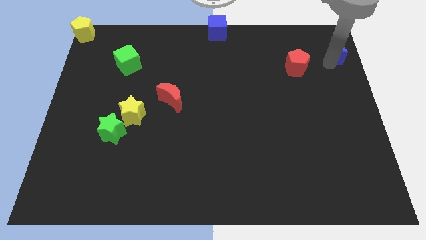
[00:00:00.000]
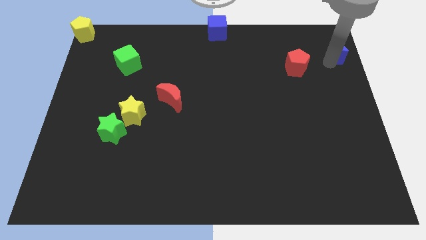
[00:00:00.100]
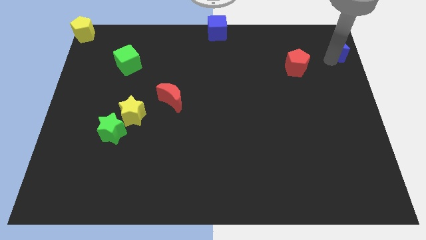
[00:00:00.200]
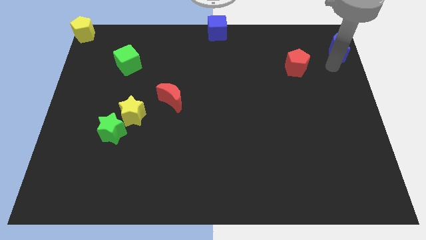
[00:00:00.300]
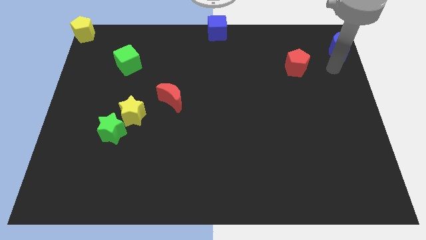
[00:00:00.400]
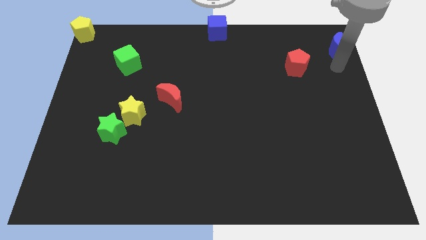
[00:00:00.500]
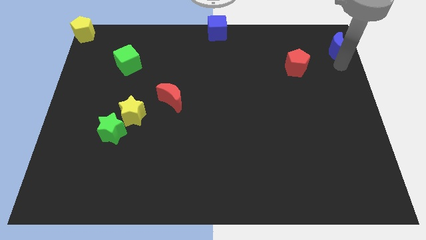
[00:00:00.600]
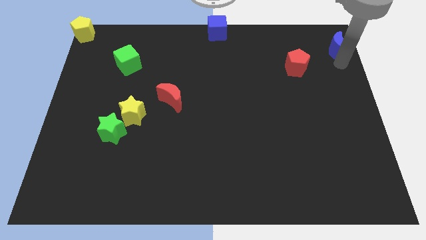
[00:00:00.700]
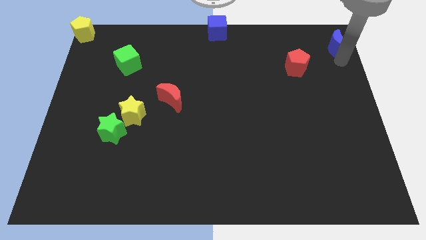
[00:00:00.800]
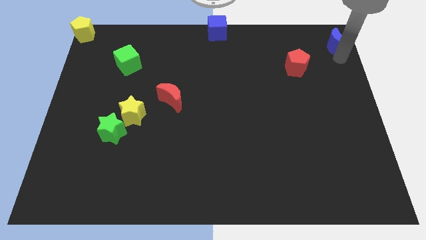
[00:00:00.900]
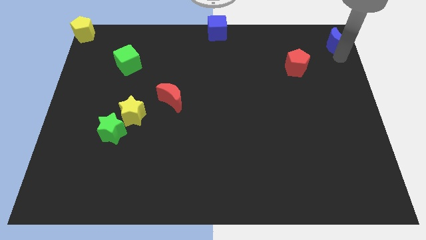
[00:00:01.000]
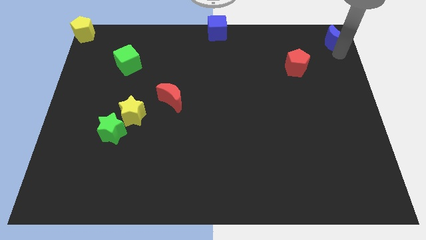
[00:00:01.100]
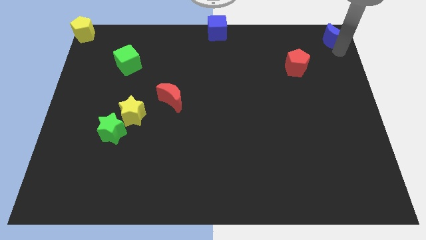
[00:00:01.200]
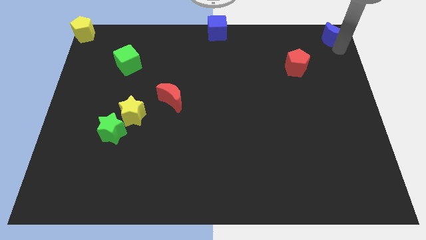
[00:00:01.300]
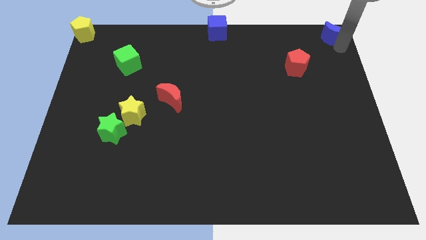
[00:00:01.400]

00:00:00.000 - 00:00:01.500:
place the blue moon at the top right corner of the board

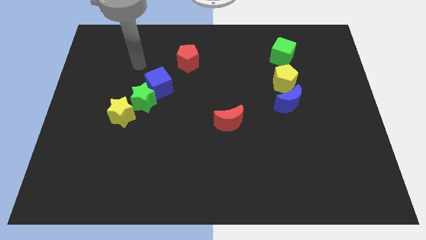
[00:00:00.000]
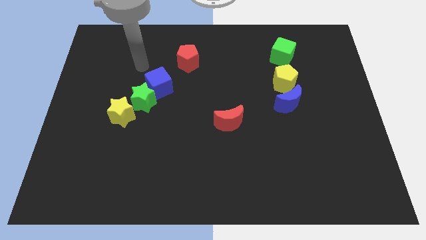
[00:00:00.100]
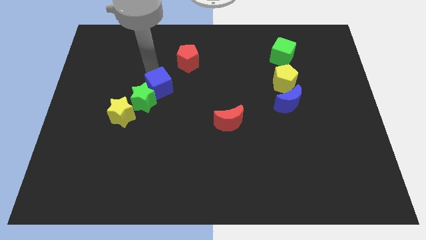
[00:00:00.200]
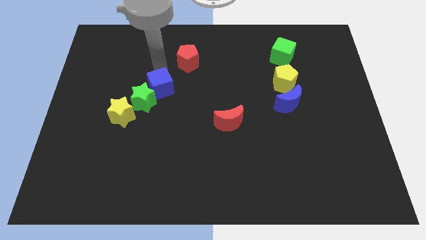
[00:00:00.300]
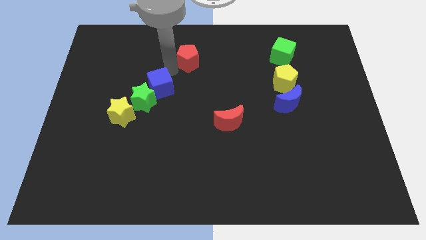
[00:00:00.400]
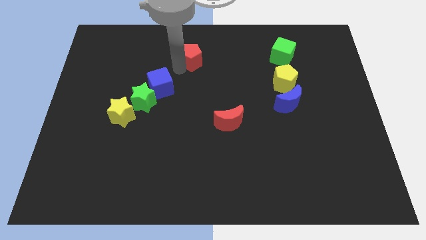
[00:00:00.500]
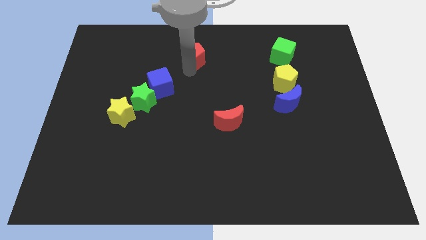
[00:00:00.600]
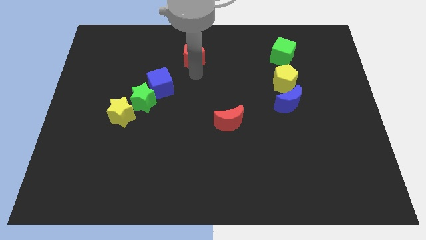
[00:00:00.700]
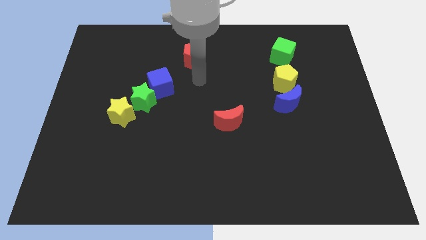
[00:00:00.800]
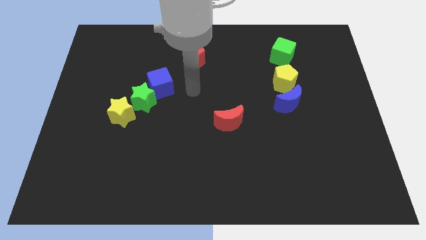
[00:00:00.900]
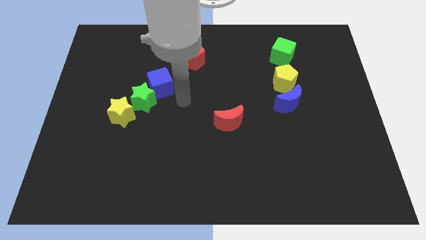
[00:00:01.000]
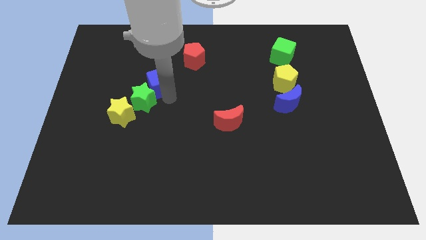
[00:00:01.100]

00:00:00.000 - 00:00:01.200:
point your arm at the bottom right side of the blue cube

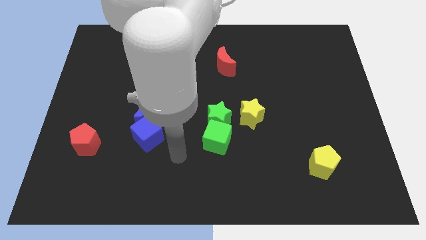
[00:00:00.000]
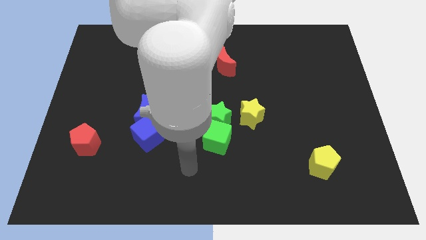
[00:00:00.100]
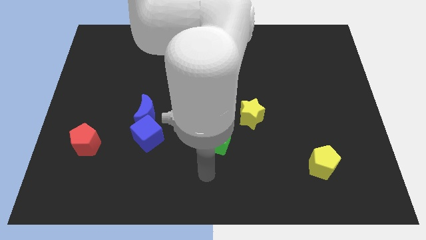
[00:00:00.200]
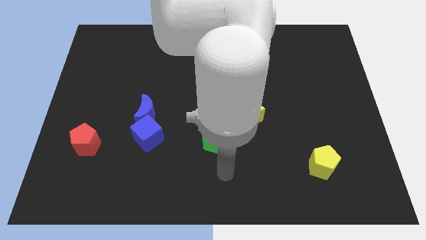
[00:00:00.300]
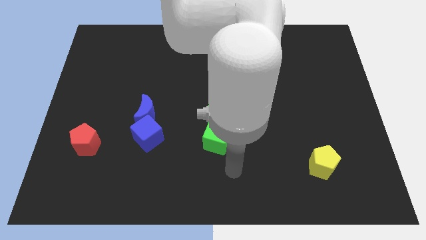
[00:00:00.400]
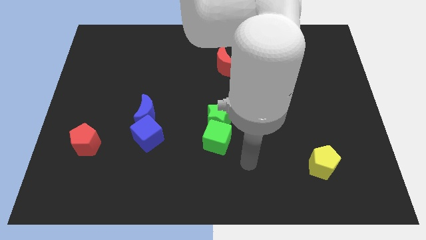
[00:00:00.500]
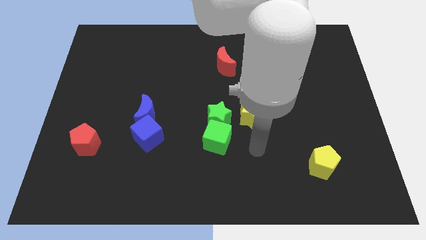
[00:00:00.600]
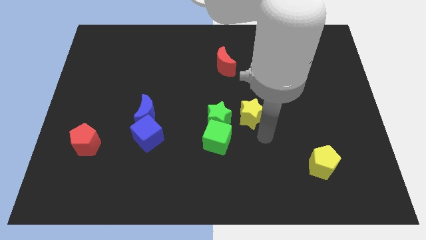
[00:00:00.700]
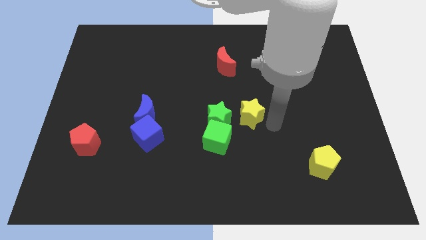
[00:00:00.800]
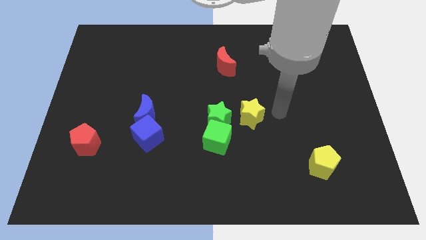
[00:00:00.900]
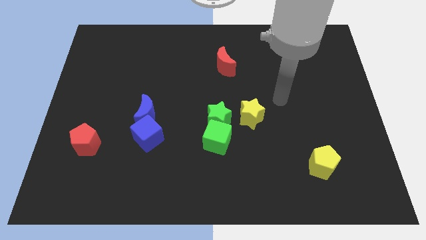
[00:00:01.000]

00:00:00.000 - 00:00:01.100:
put your arm at the top right side of the yellow star

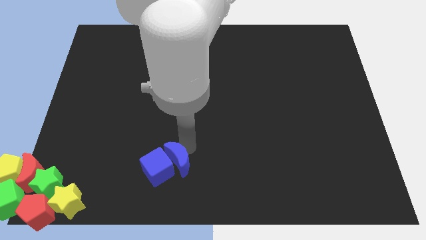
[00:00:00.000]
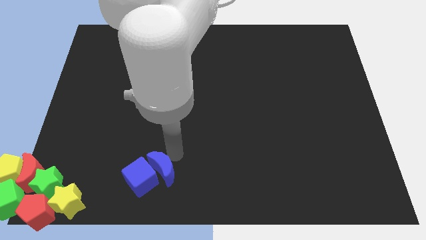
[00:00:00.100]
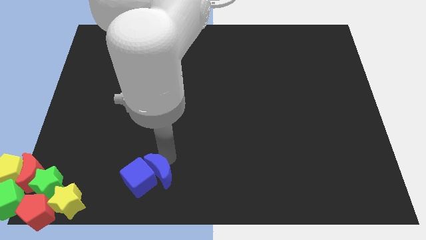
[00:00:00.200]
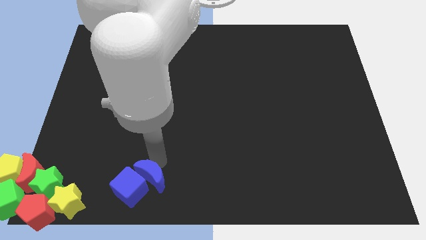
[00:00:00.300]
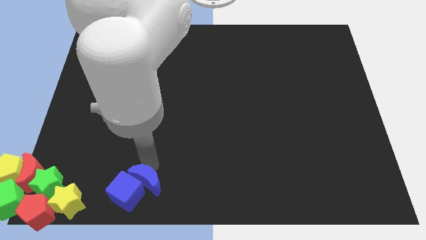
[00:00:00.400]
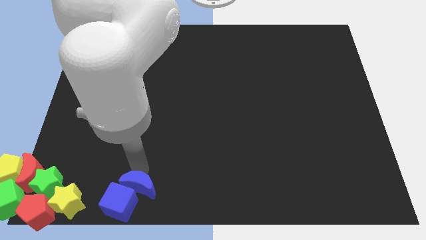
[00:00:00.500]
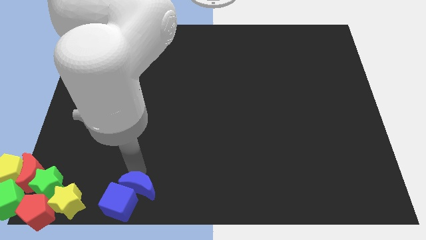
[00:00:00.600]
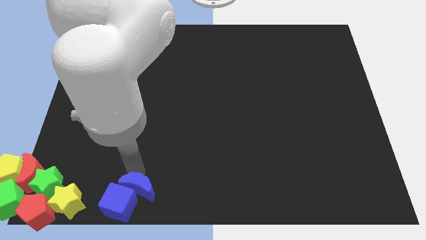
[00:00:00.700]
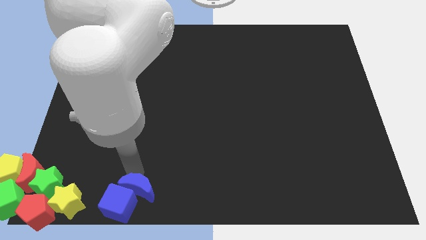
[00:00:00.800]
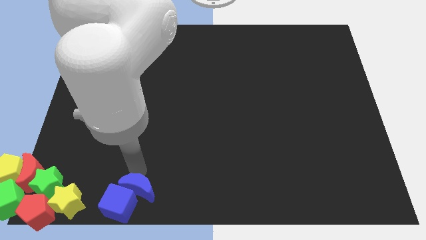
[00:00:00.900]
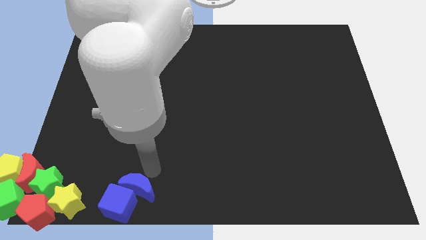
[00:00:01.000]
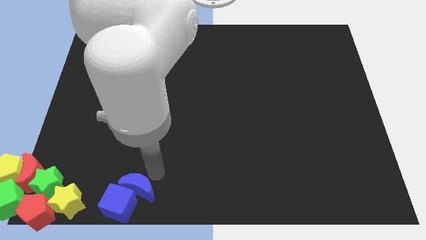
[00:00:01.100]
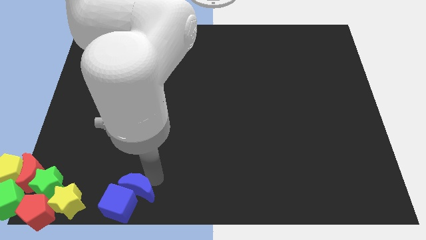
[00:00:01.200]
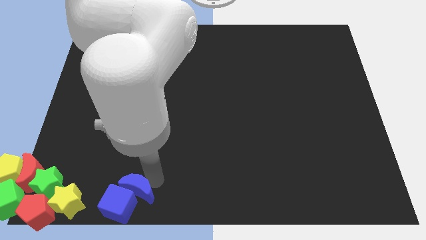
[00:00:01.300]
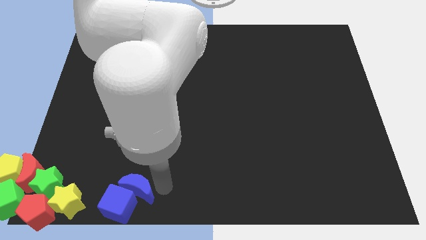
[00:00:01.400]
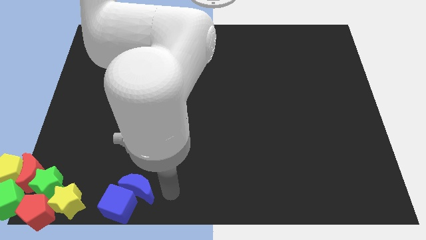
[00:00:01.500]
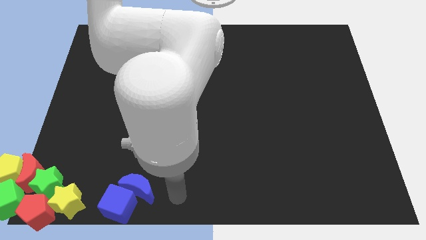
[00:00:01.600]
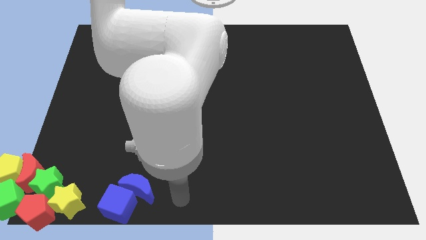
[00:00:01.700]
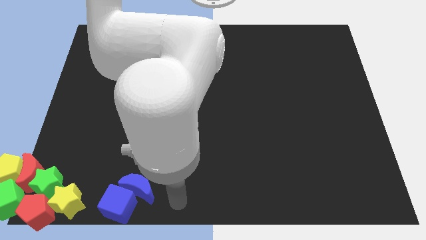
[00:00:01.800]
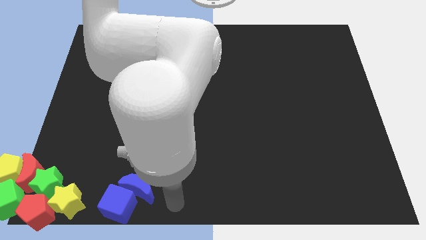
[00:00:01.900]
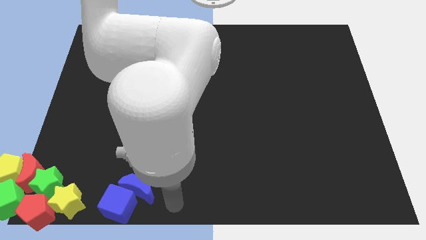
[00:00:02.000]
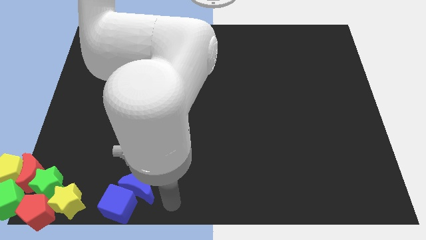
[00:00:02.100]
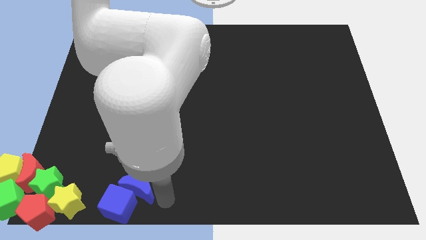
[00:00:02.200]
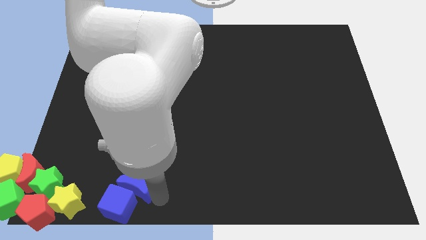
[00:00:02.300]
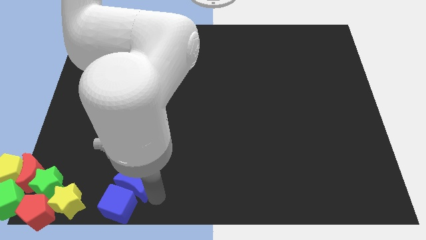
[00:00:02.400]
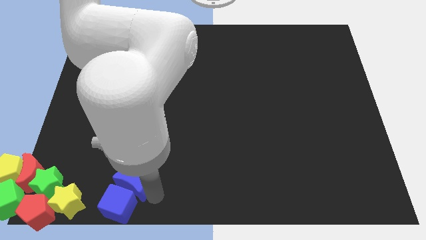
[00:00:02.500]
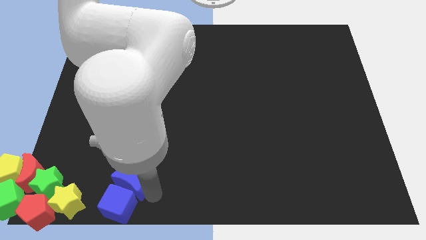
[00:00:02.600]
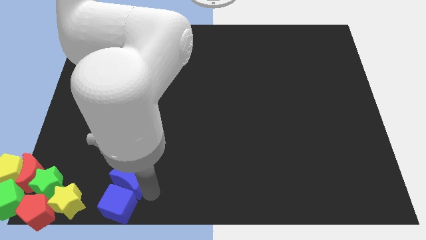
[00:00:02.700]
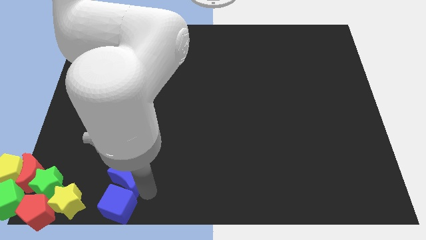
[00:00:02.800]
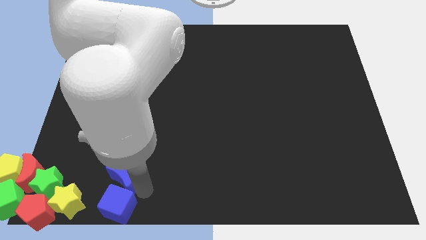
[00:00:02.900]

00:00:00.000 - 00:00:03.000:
move the blue blocks to the bottom left side of the blocks

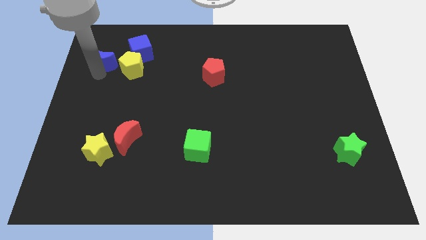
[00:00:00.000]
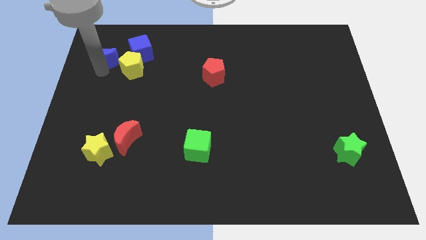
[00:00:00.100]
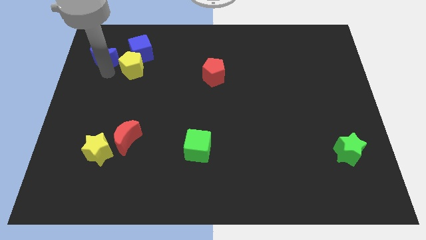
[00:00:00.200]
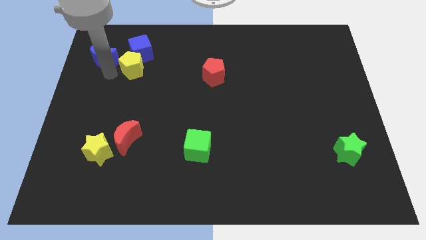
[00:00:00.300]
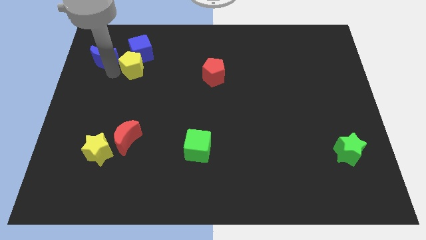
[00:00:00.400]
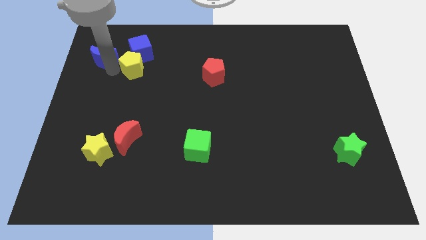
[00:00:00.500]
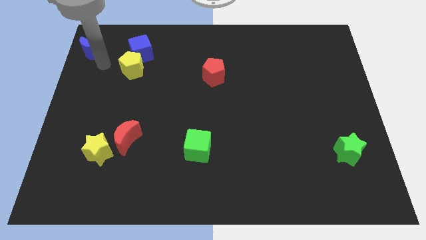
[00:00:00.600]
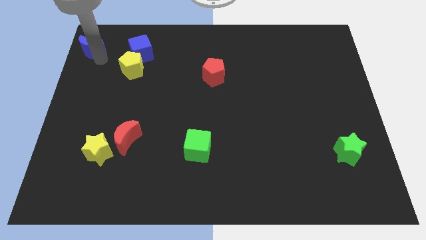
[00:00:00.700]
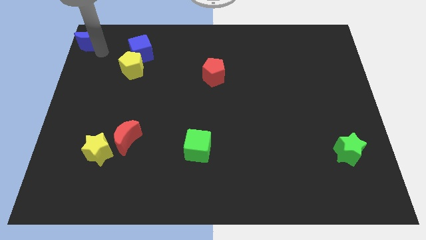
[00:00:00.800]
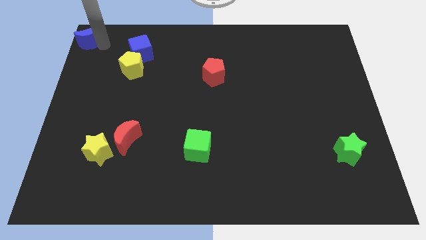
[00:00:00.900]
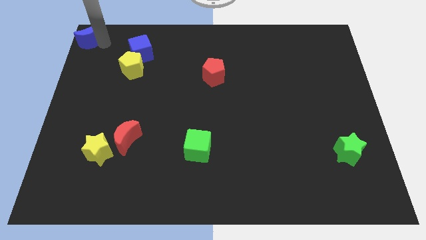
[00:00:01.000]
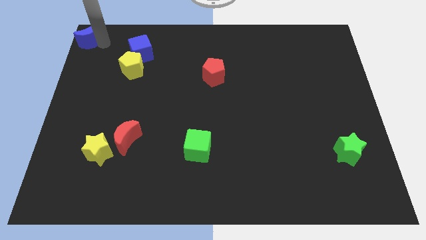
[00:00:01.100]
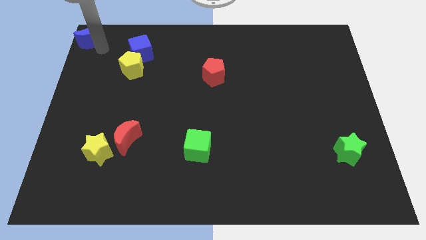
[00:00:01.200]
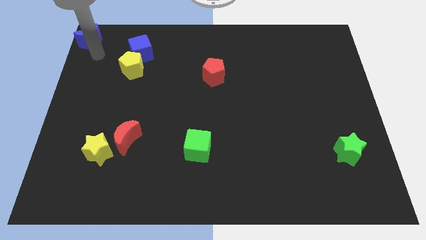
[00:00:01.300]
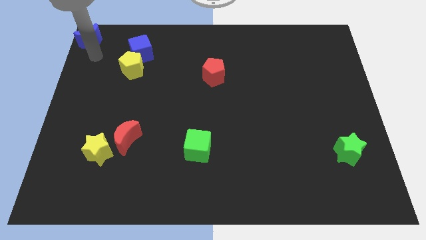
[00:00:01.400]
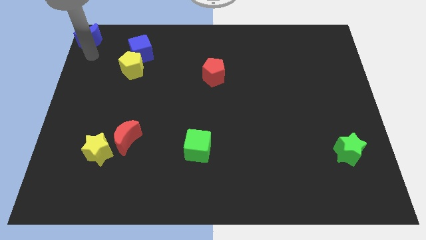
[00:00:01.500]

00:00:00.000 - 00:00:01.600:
put the blue moon at the top left corner

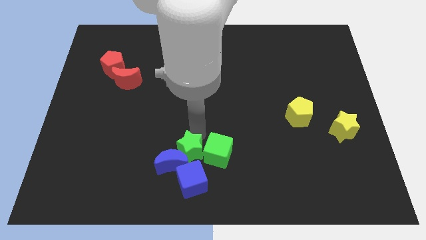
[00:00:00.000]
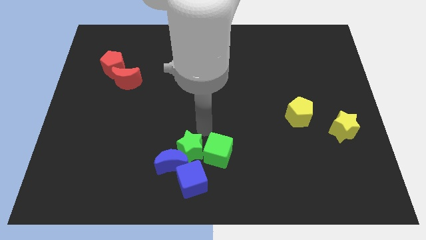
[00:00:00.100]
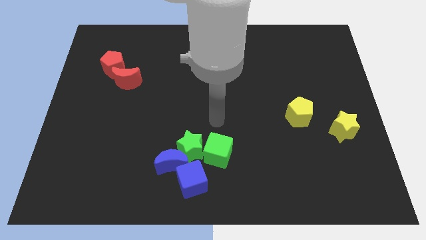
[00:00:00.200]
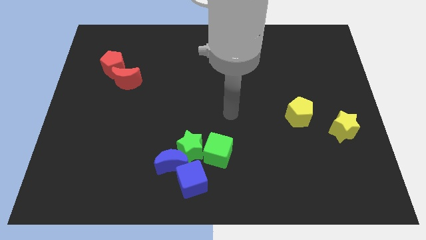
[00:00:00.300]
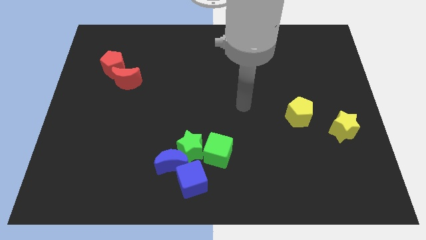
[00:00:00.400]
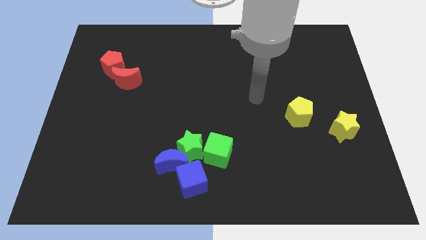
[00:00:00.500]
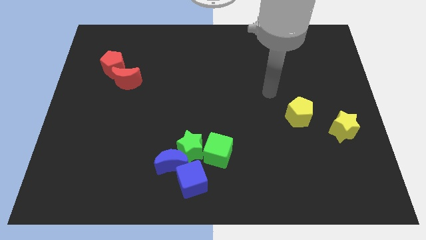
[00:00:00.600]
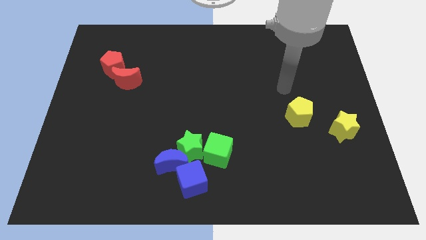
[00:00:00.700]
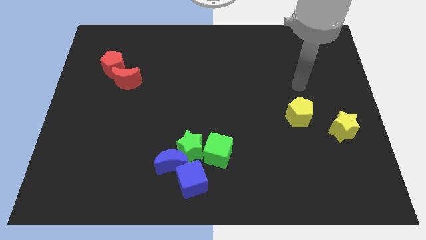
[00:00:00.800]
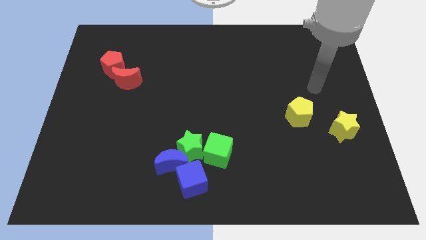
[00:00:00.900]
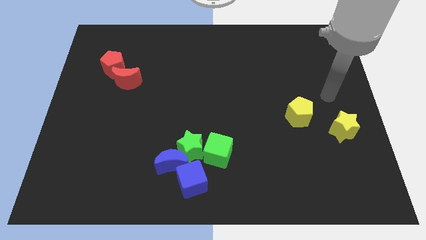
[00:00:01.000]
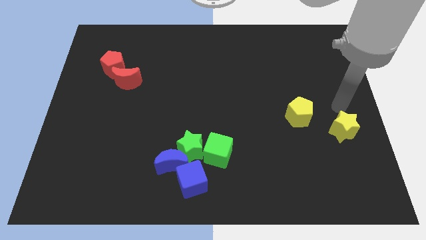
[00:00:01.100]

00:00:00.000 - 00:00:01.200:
move your arm towards the center right side of the board
